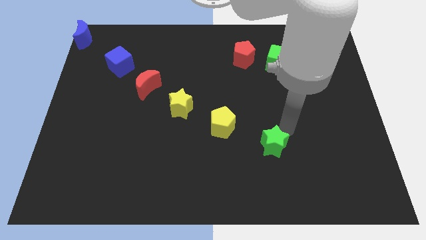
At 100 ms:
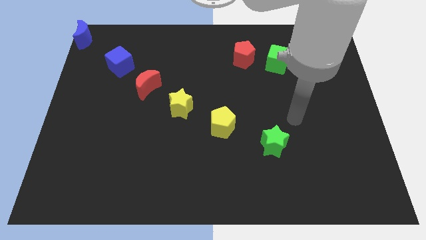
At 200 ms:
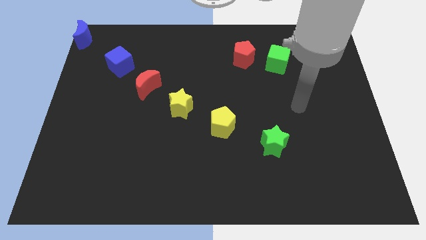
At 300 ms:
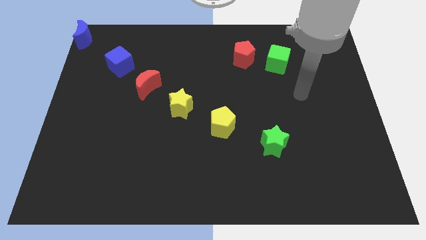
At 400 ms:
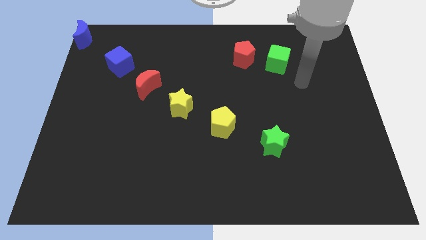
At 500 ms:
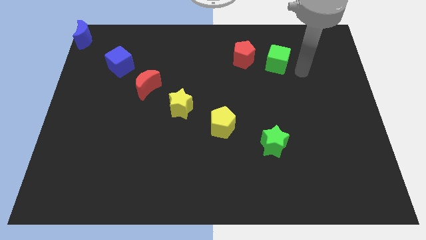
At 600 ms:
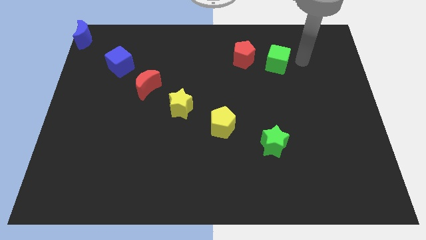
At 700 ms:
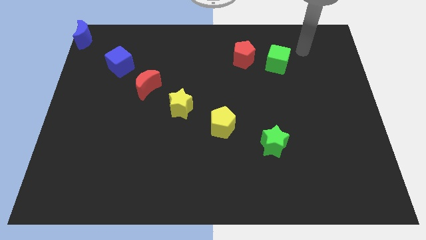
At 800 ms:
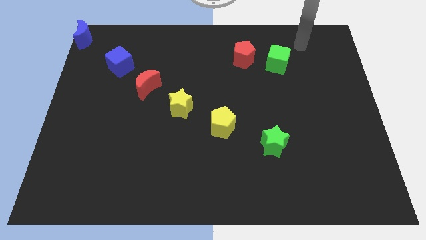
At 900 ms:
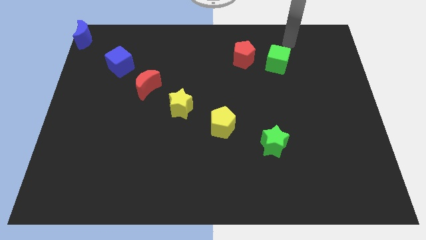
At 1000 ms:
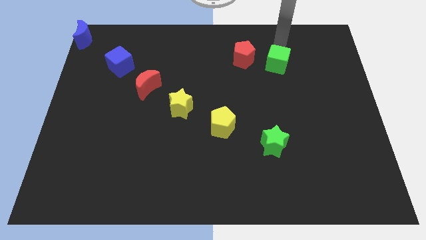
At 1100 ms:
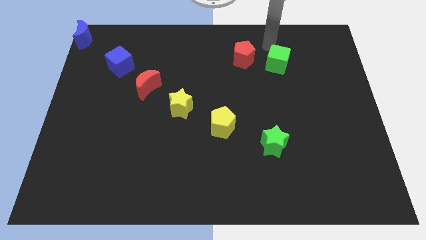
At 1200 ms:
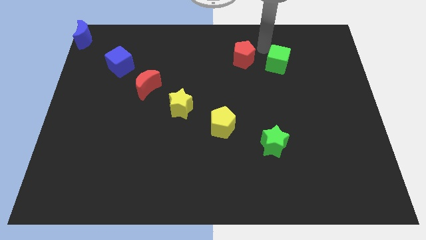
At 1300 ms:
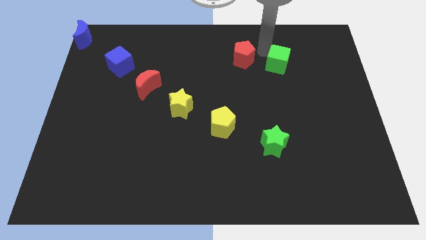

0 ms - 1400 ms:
move the arm away from the green star

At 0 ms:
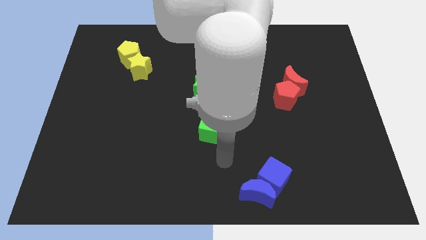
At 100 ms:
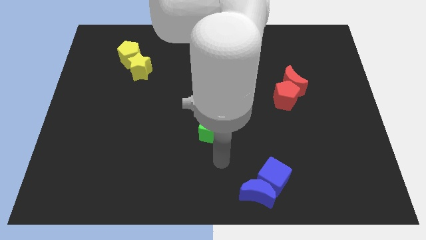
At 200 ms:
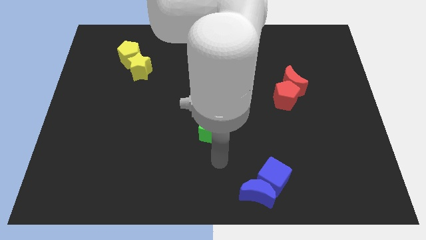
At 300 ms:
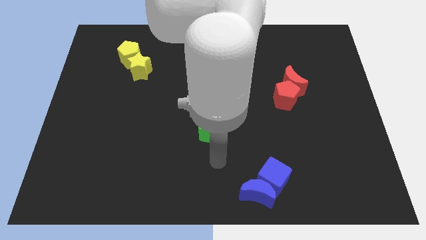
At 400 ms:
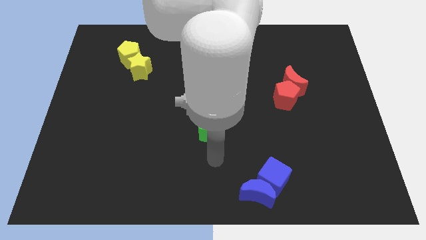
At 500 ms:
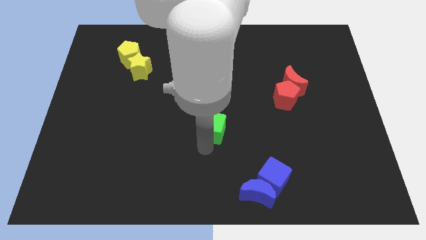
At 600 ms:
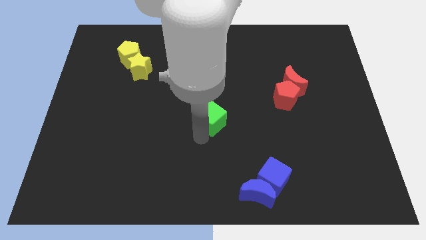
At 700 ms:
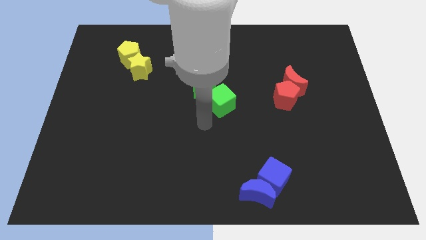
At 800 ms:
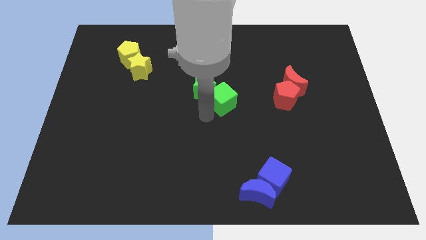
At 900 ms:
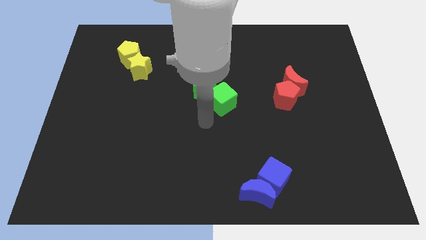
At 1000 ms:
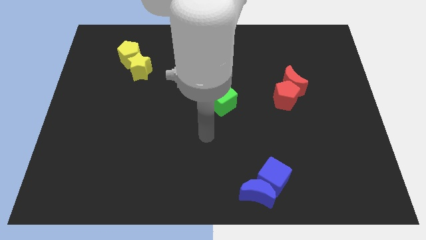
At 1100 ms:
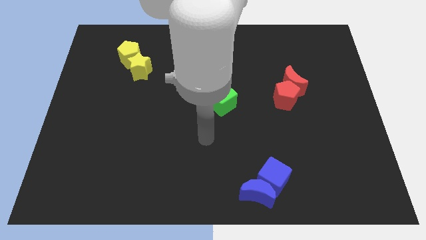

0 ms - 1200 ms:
push the green cube into the green star

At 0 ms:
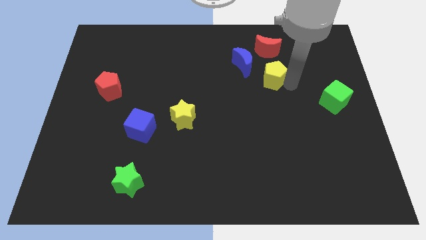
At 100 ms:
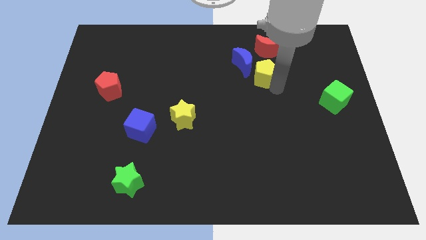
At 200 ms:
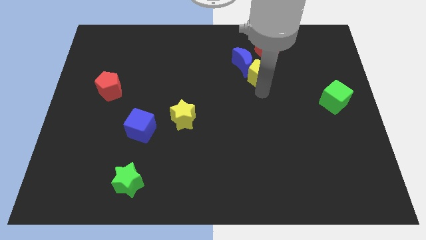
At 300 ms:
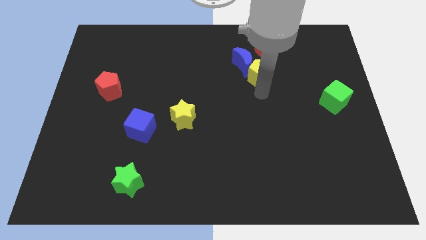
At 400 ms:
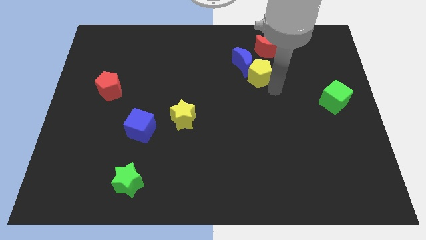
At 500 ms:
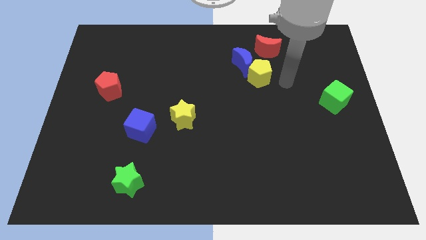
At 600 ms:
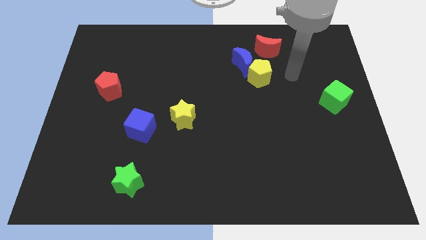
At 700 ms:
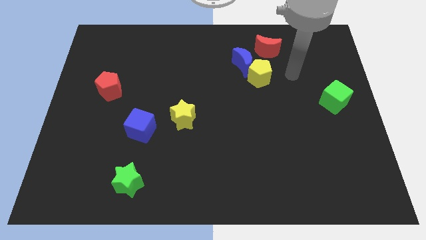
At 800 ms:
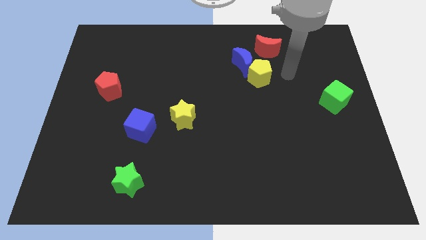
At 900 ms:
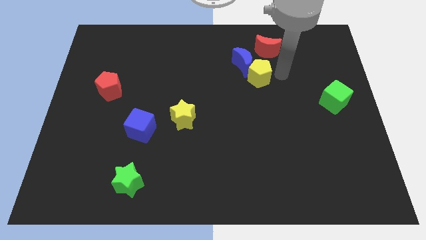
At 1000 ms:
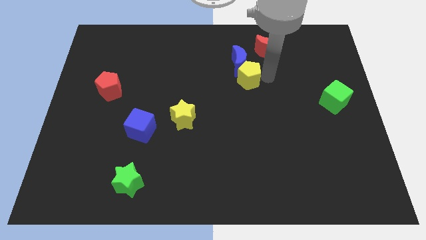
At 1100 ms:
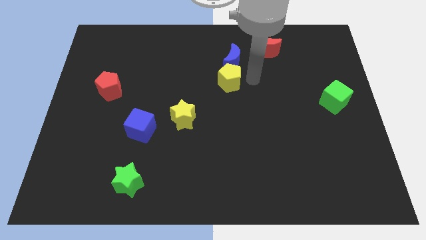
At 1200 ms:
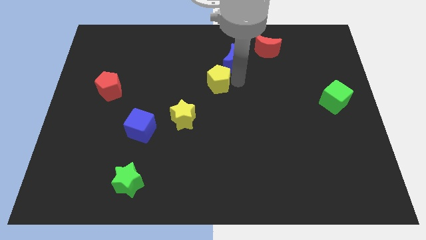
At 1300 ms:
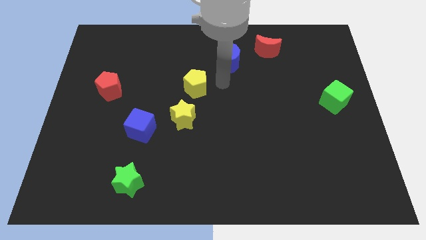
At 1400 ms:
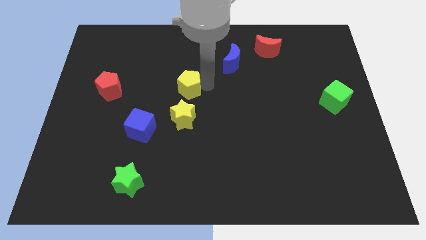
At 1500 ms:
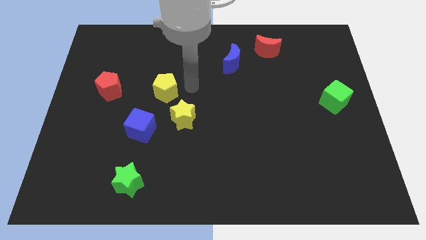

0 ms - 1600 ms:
place yellow pentagon to the top of yellow star

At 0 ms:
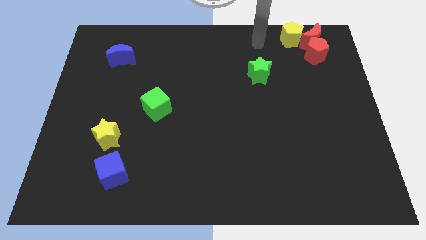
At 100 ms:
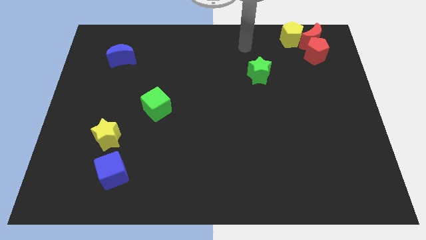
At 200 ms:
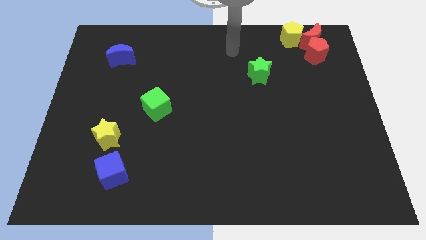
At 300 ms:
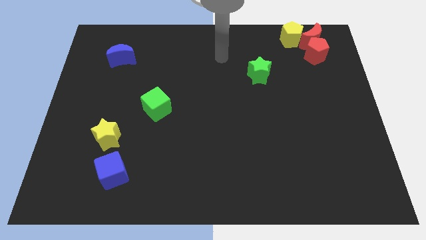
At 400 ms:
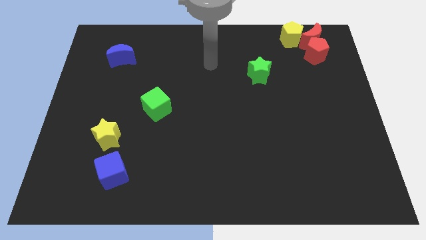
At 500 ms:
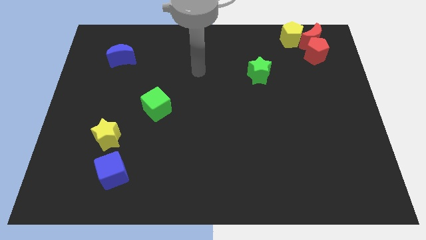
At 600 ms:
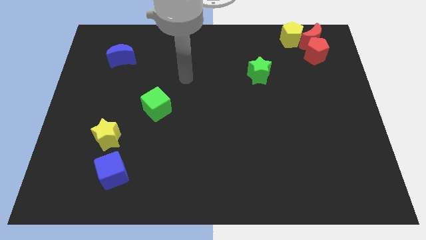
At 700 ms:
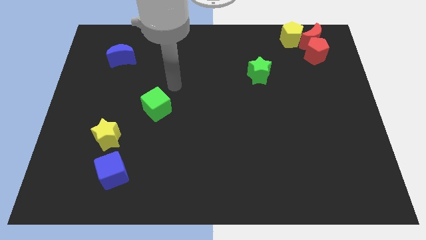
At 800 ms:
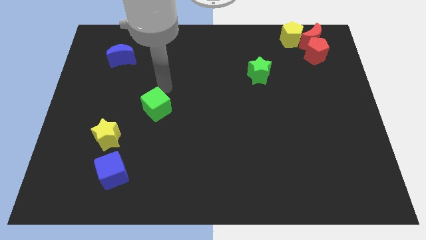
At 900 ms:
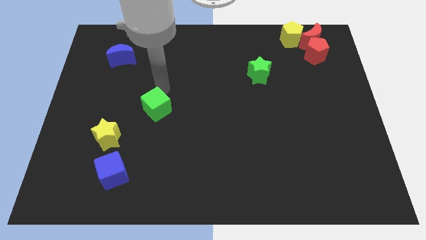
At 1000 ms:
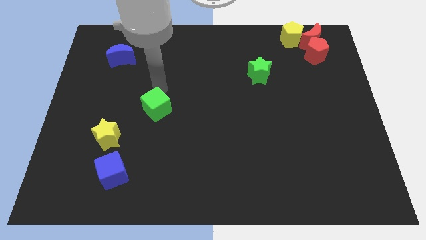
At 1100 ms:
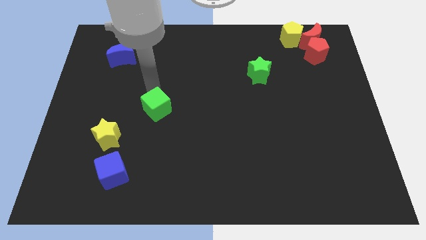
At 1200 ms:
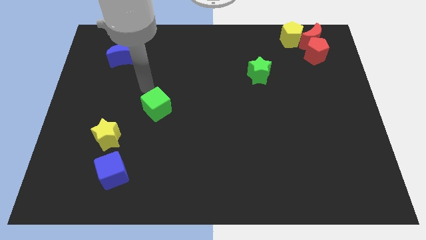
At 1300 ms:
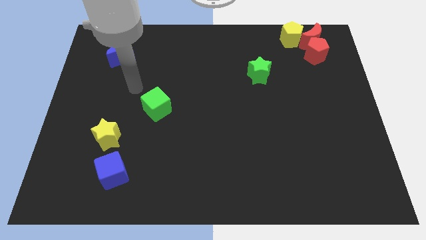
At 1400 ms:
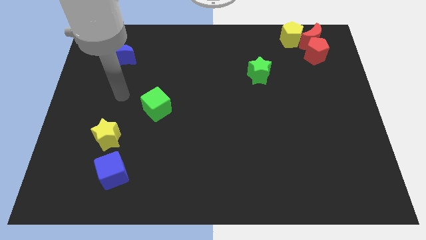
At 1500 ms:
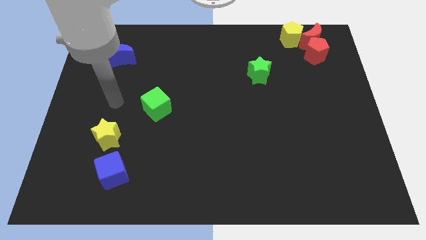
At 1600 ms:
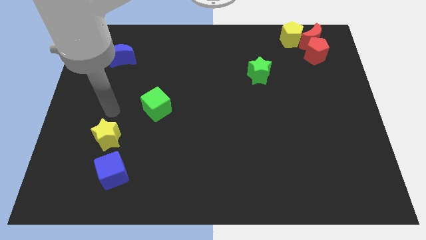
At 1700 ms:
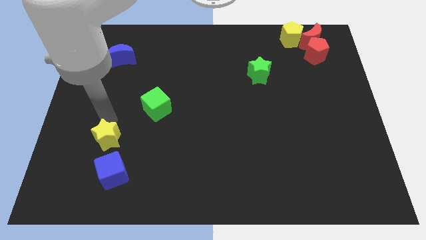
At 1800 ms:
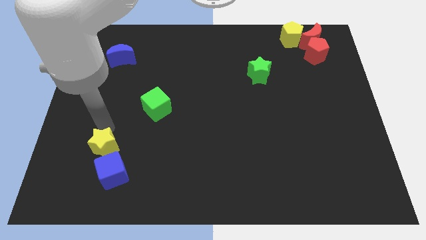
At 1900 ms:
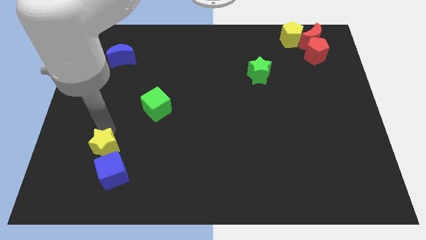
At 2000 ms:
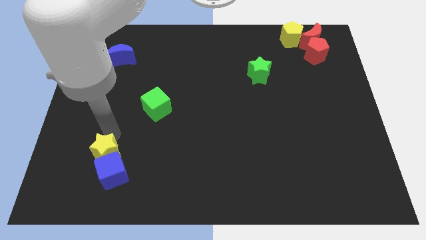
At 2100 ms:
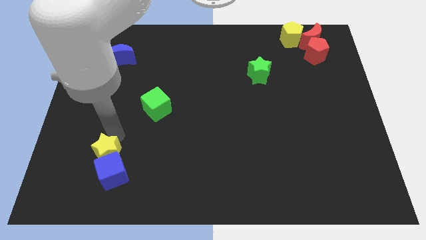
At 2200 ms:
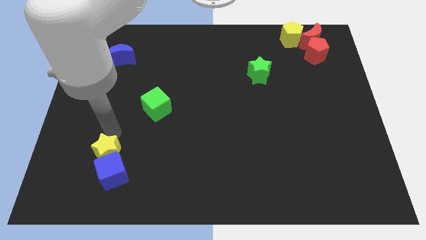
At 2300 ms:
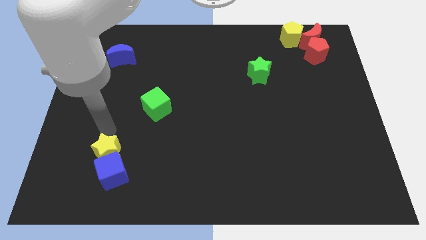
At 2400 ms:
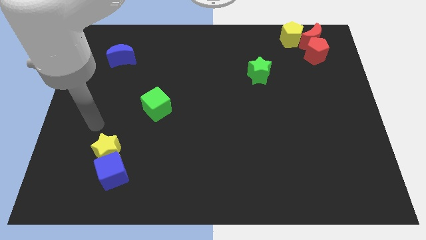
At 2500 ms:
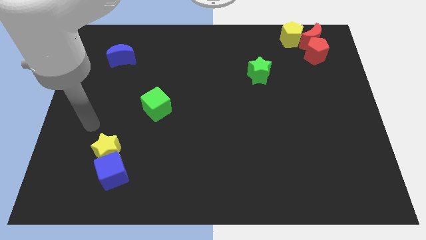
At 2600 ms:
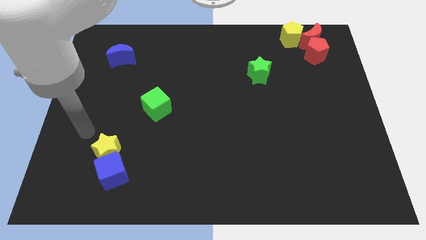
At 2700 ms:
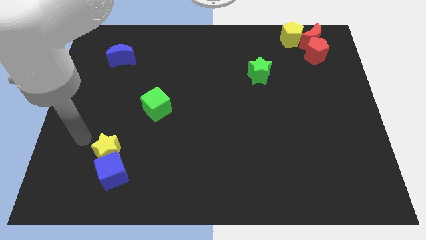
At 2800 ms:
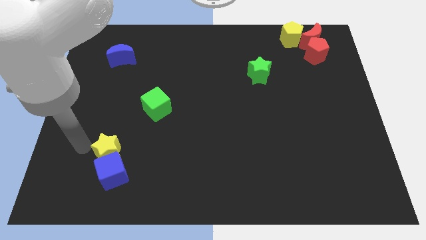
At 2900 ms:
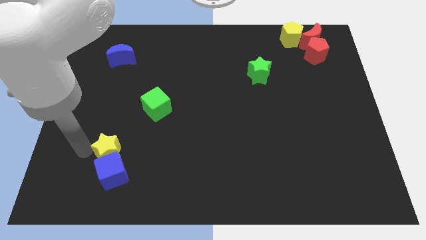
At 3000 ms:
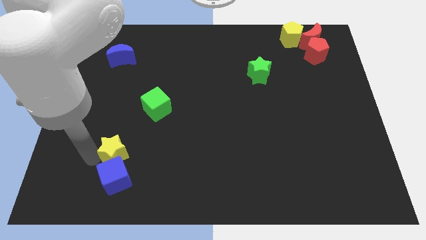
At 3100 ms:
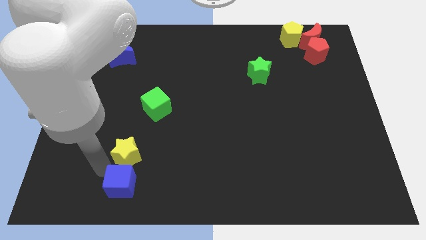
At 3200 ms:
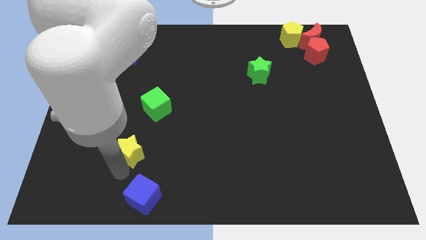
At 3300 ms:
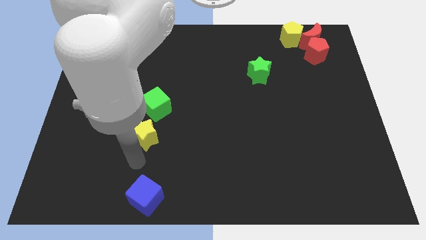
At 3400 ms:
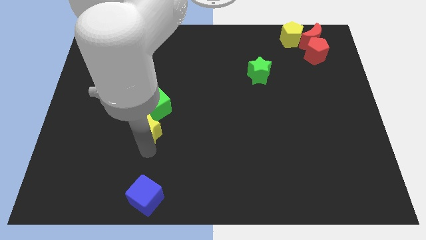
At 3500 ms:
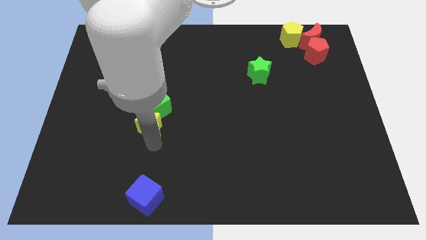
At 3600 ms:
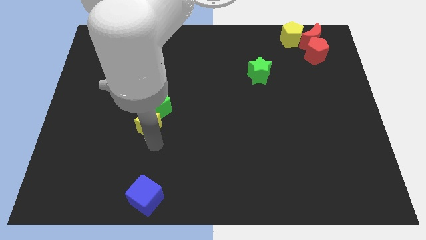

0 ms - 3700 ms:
move yellow star below the green cube

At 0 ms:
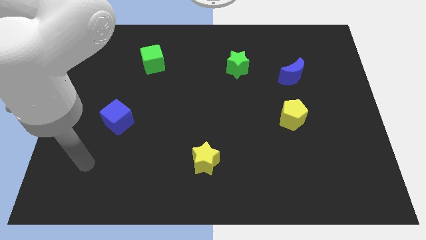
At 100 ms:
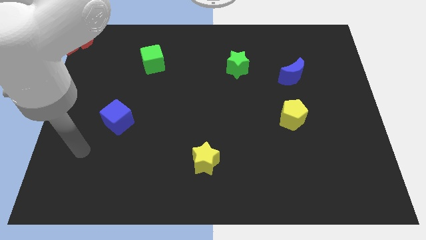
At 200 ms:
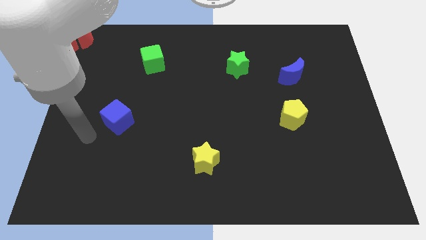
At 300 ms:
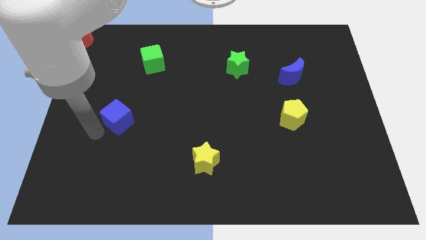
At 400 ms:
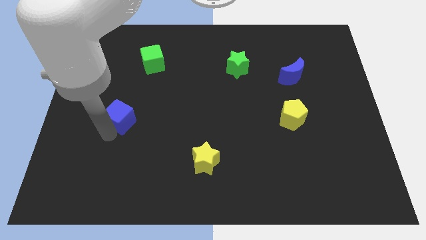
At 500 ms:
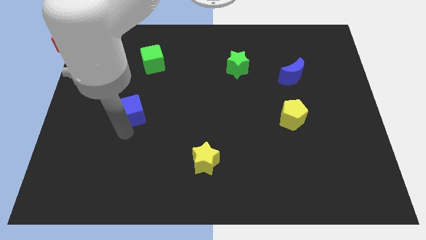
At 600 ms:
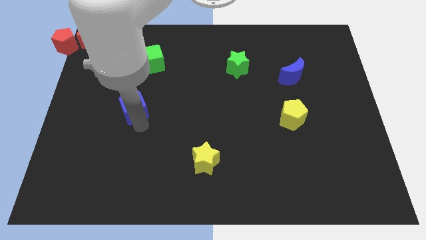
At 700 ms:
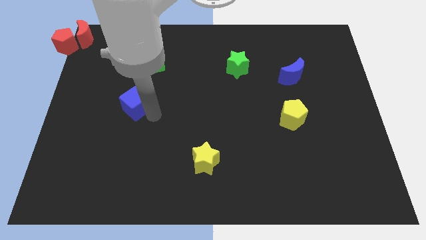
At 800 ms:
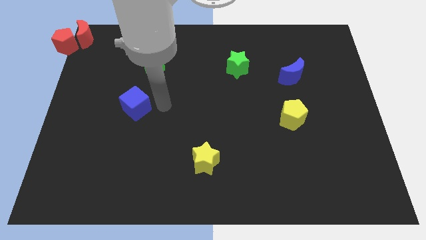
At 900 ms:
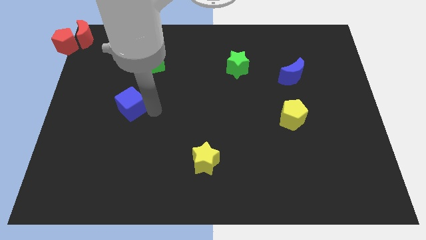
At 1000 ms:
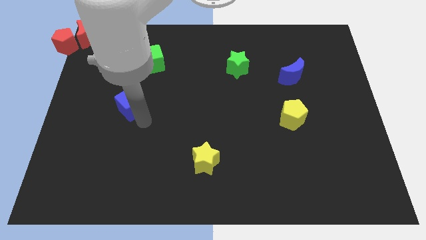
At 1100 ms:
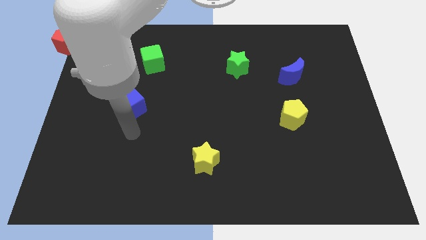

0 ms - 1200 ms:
move blue cube towards green cube
